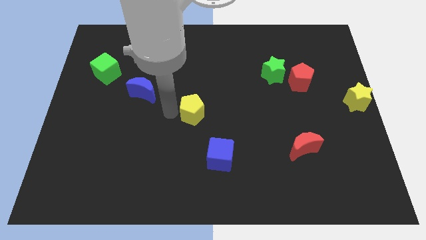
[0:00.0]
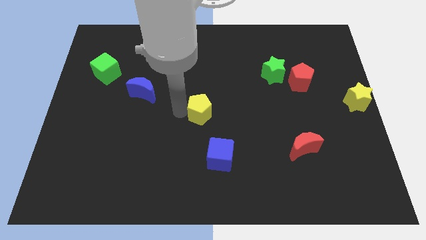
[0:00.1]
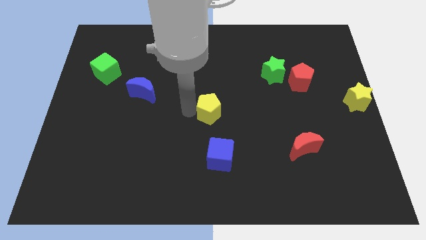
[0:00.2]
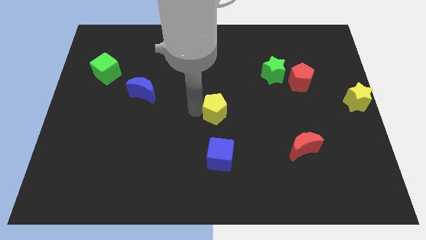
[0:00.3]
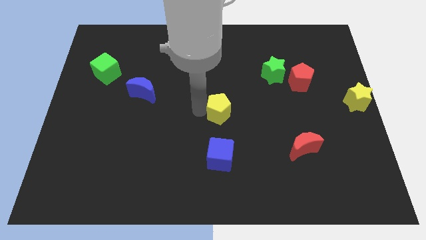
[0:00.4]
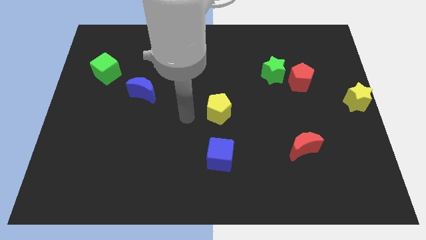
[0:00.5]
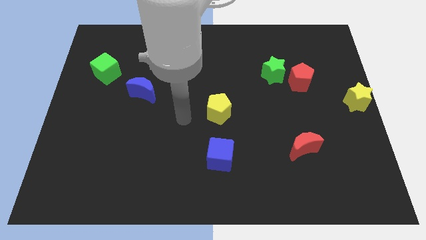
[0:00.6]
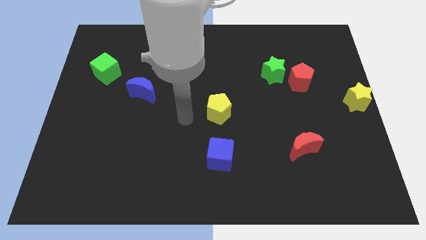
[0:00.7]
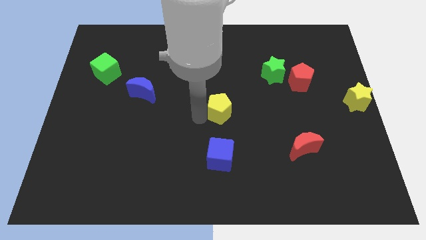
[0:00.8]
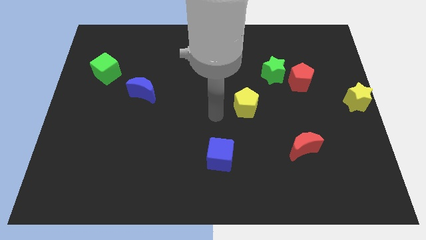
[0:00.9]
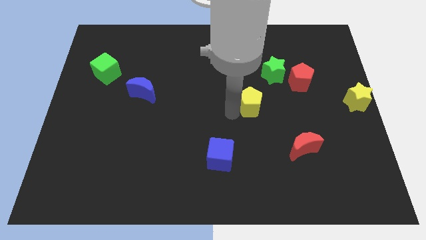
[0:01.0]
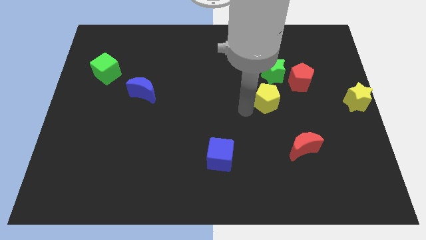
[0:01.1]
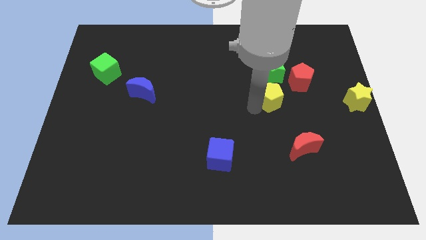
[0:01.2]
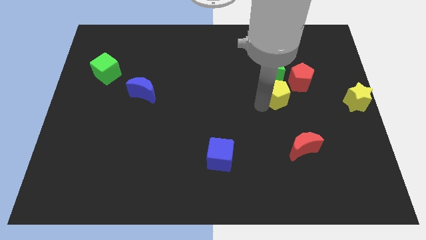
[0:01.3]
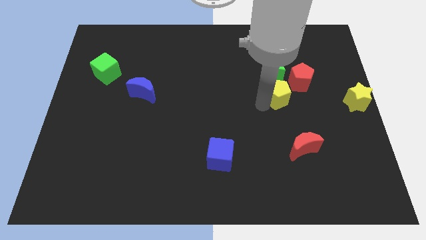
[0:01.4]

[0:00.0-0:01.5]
put yellow pentagon to the bottom of green star

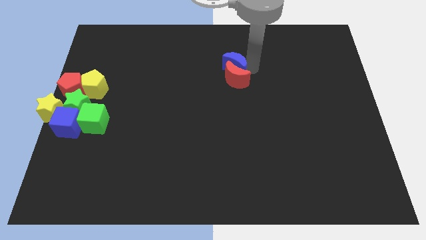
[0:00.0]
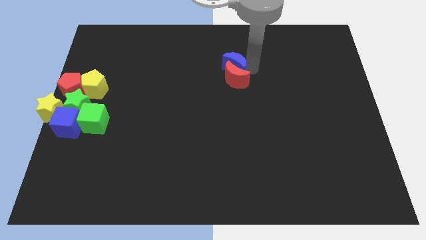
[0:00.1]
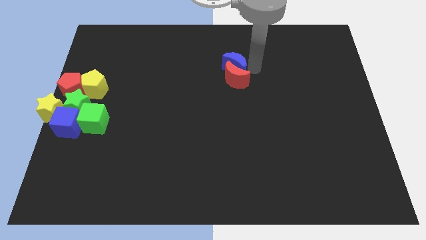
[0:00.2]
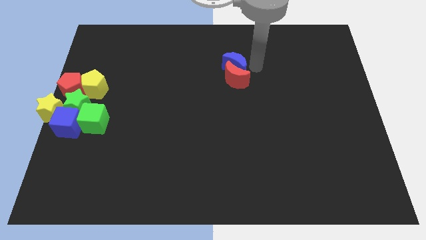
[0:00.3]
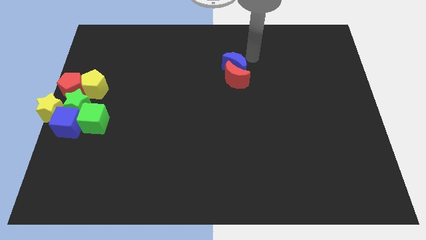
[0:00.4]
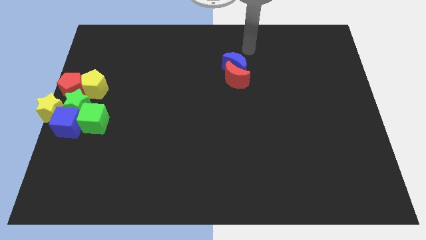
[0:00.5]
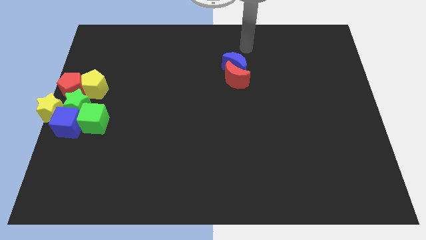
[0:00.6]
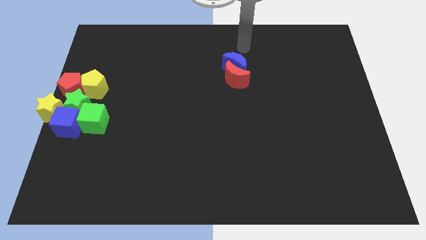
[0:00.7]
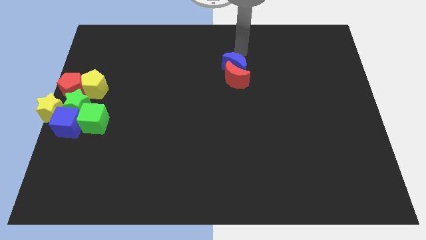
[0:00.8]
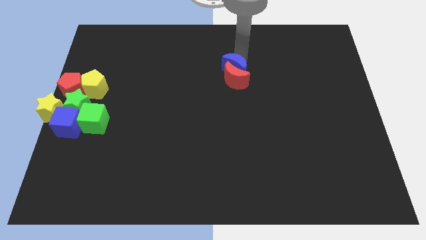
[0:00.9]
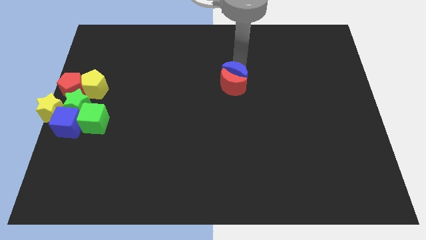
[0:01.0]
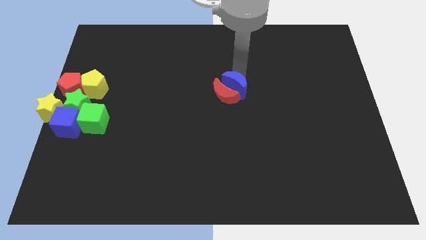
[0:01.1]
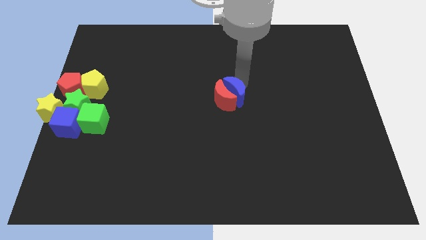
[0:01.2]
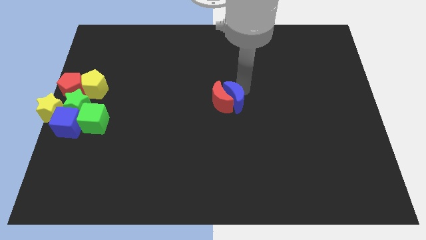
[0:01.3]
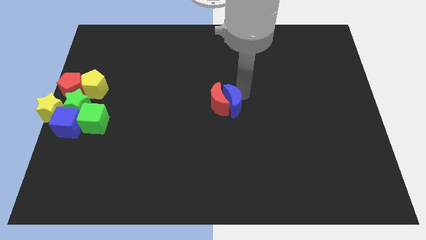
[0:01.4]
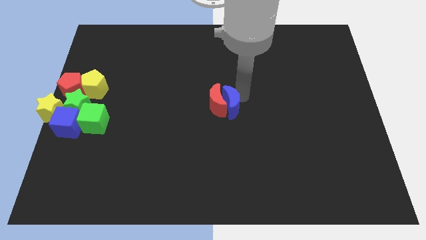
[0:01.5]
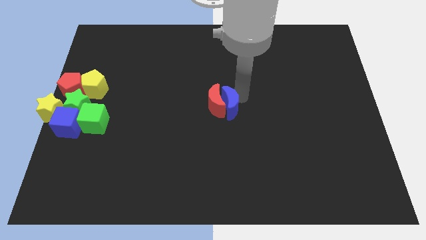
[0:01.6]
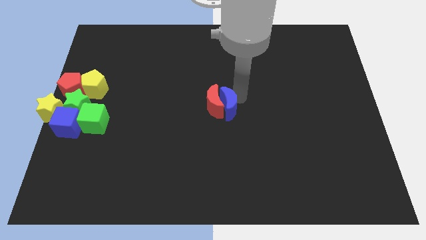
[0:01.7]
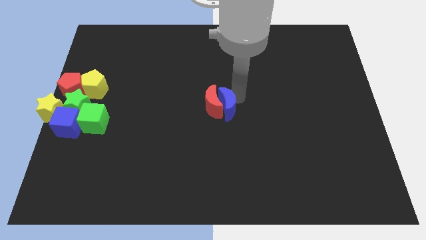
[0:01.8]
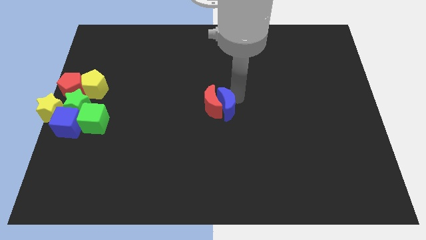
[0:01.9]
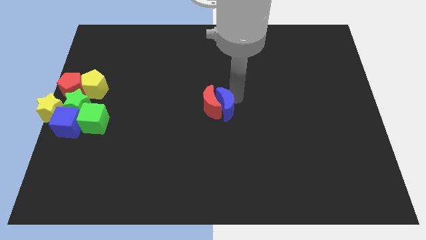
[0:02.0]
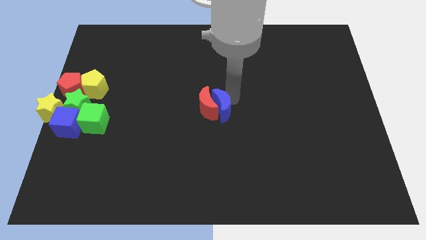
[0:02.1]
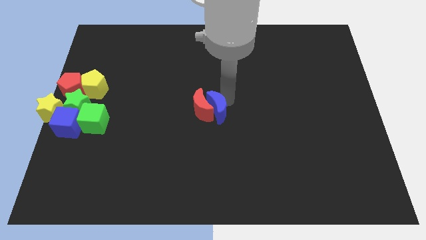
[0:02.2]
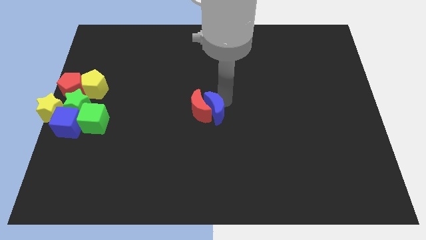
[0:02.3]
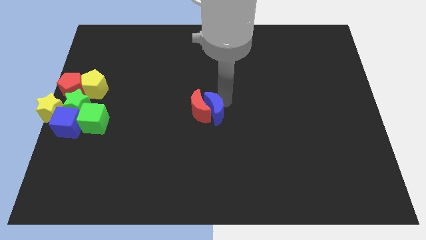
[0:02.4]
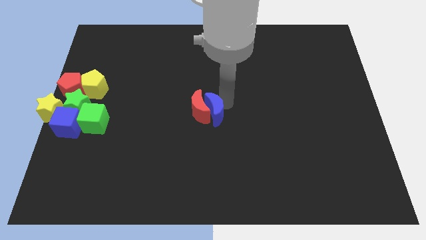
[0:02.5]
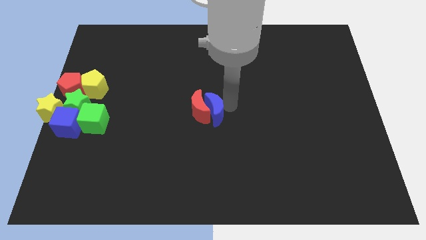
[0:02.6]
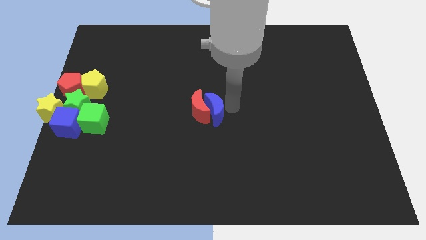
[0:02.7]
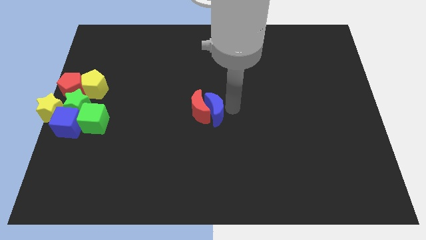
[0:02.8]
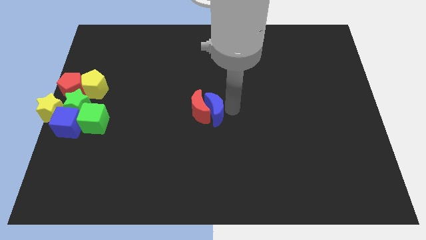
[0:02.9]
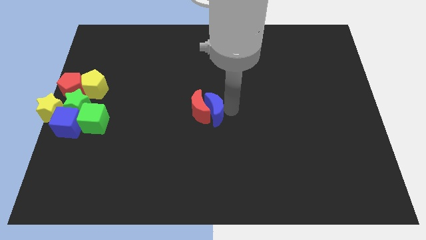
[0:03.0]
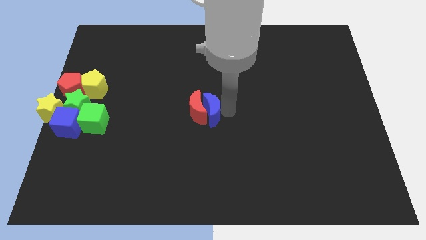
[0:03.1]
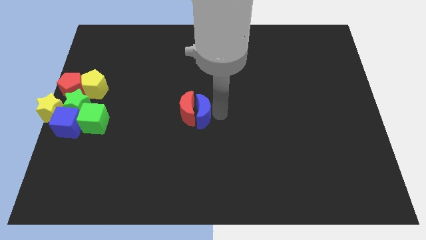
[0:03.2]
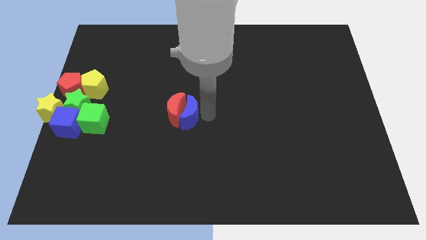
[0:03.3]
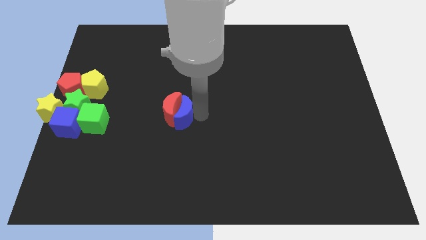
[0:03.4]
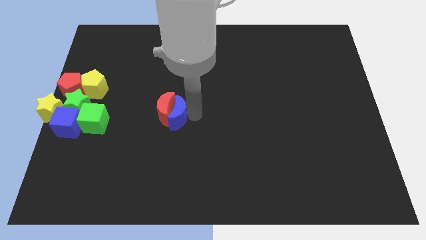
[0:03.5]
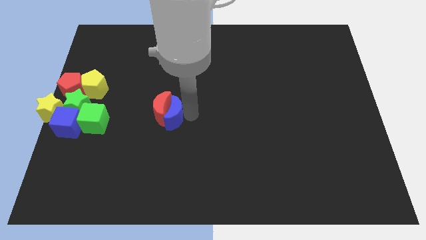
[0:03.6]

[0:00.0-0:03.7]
slide the red moon and blue moon to the right of green cube

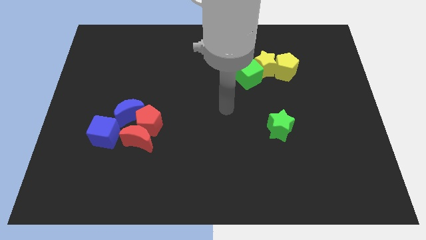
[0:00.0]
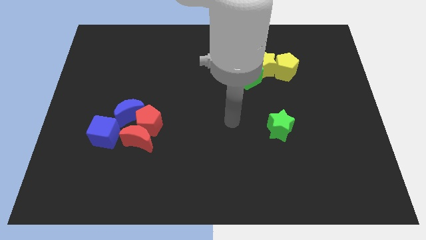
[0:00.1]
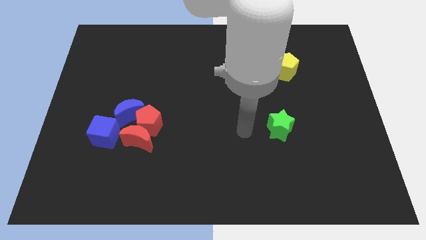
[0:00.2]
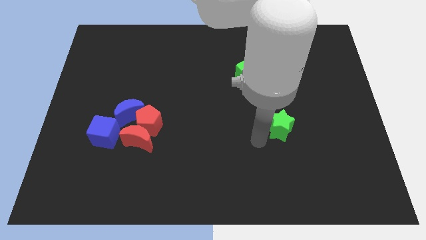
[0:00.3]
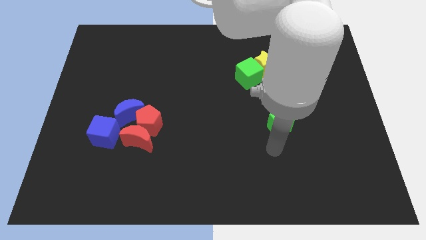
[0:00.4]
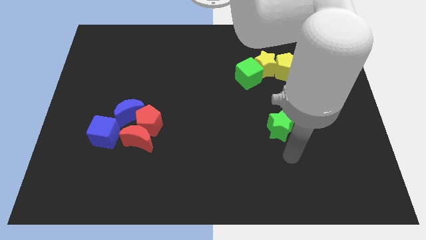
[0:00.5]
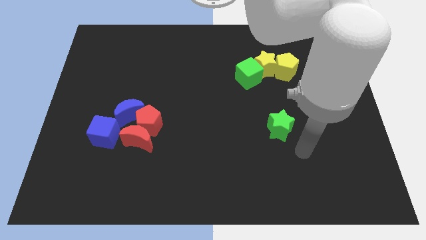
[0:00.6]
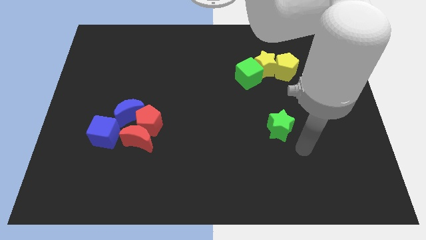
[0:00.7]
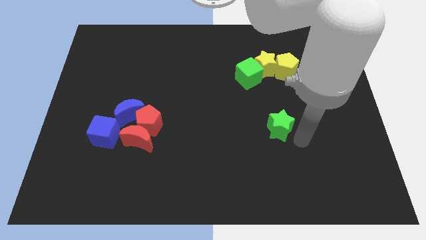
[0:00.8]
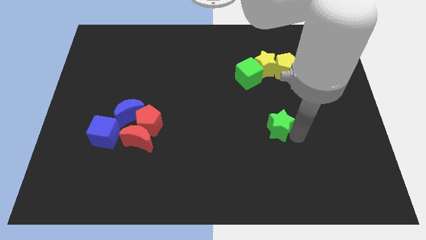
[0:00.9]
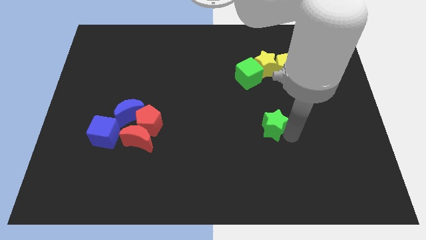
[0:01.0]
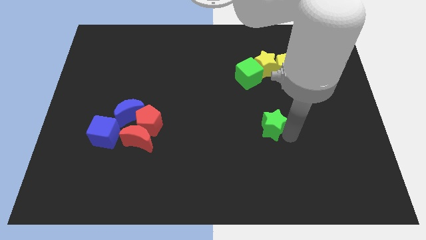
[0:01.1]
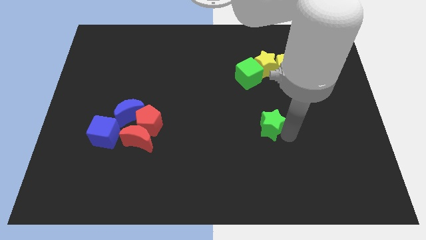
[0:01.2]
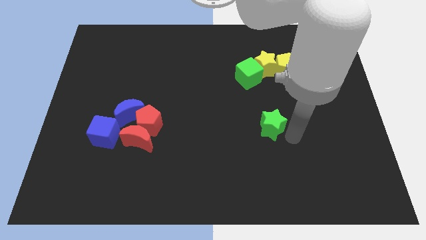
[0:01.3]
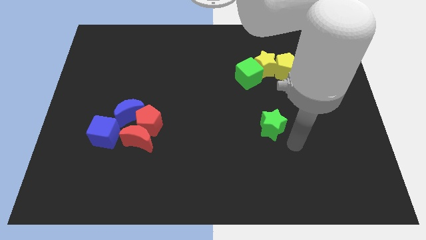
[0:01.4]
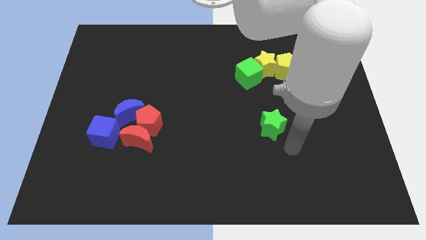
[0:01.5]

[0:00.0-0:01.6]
place the green star parallel red pentagon

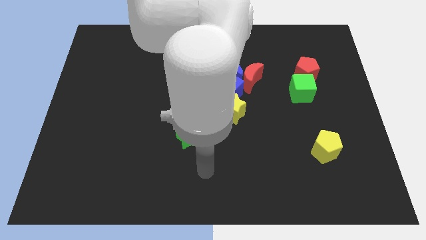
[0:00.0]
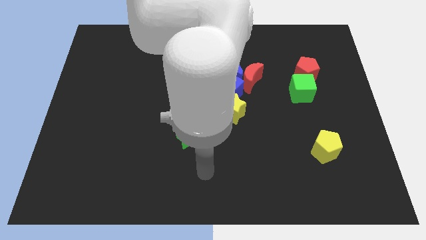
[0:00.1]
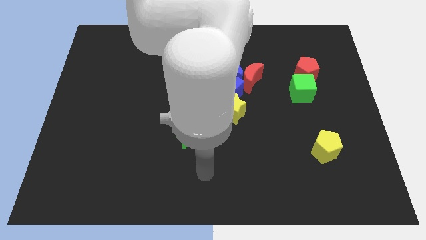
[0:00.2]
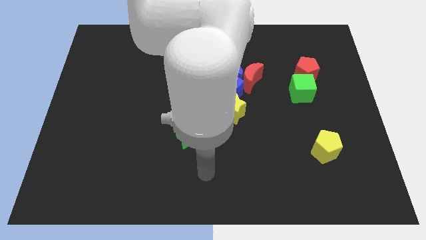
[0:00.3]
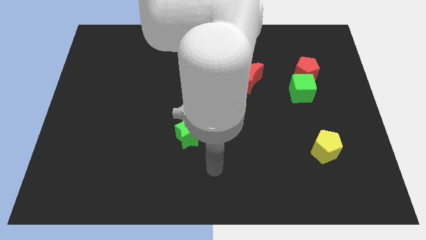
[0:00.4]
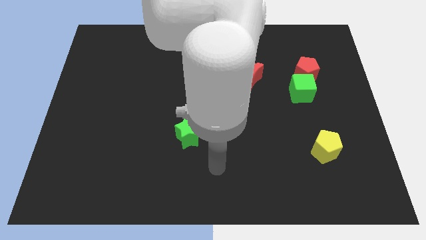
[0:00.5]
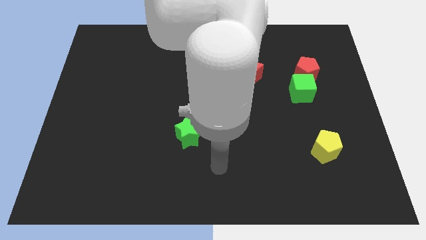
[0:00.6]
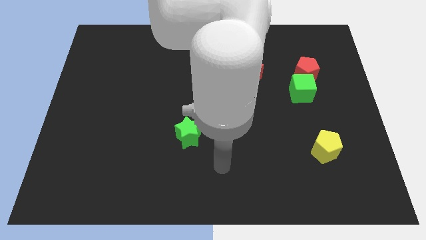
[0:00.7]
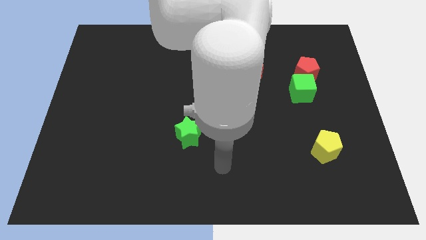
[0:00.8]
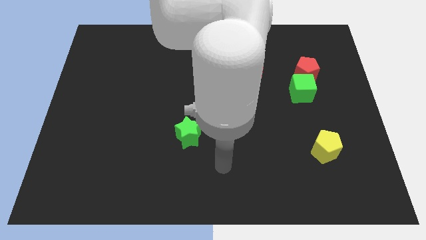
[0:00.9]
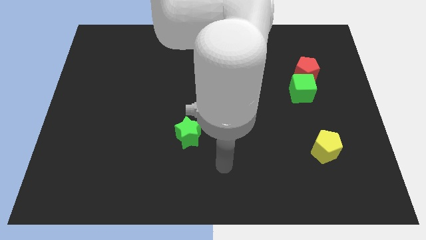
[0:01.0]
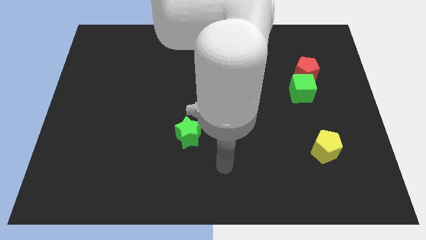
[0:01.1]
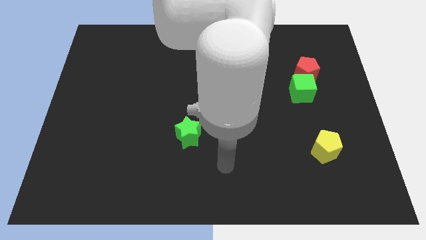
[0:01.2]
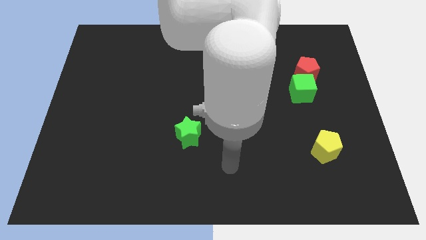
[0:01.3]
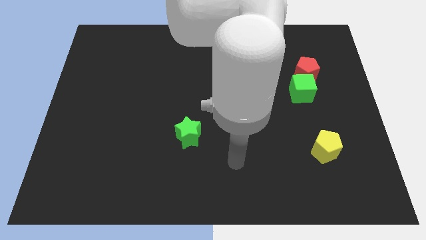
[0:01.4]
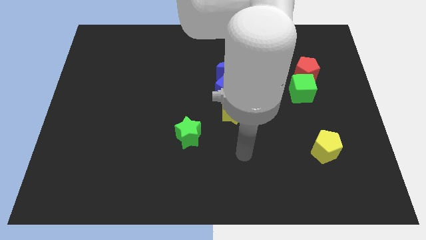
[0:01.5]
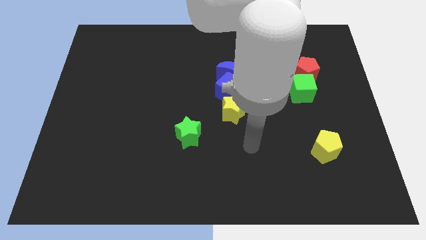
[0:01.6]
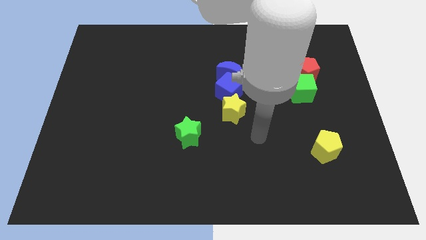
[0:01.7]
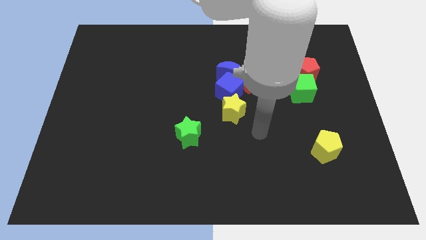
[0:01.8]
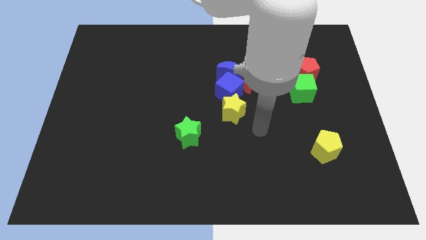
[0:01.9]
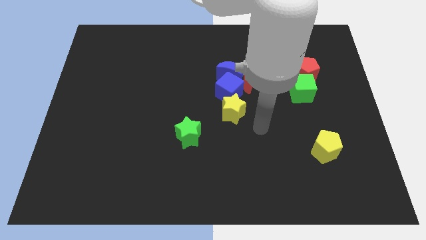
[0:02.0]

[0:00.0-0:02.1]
move your arm towards the right side of the yellow star

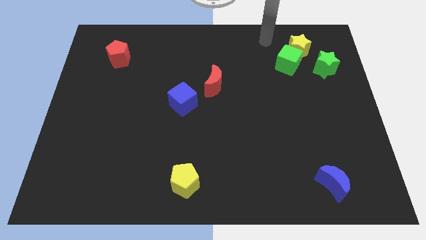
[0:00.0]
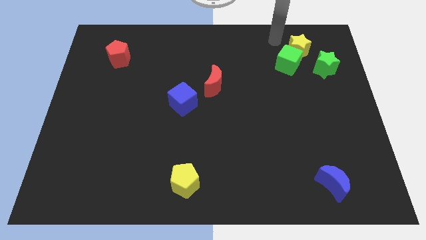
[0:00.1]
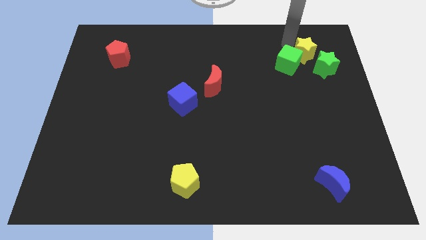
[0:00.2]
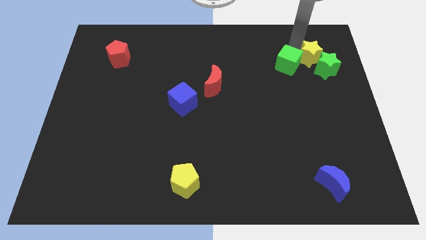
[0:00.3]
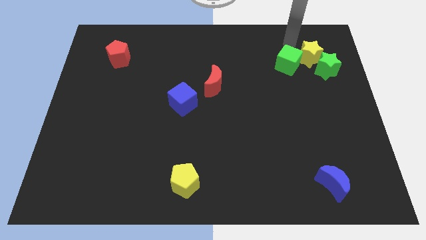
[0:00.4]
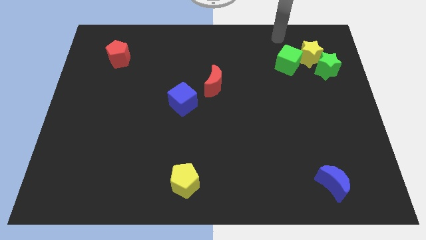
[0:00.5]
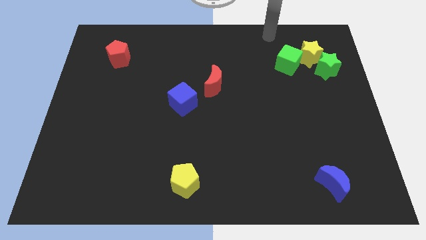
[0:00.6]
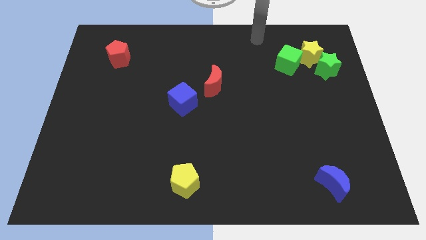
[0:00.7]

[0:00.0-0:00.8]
push the yellow star into the top side of the green star
